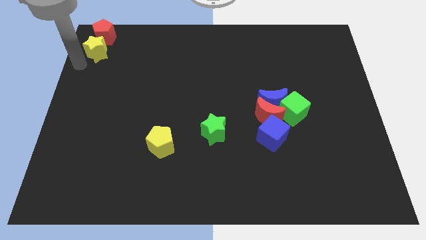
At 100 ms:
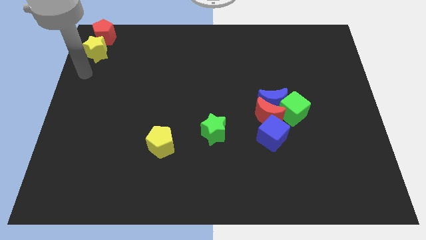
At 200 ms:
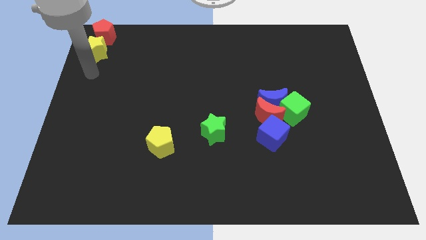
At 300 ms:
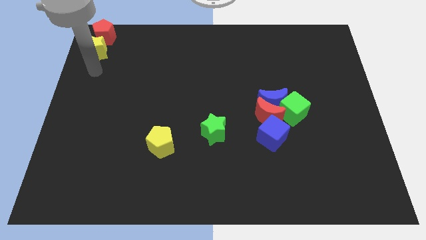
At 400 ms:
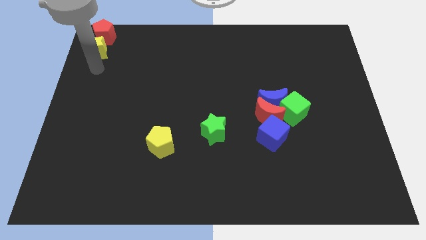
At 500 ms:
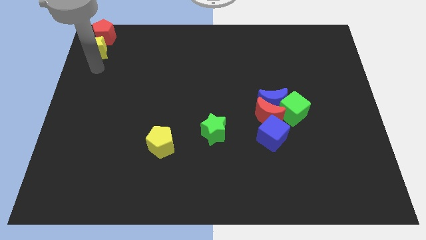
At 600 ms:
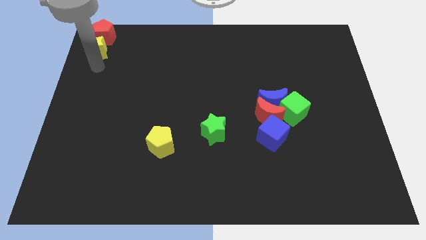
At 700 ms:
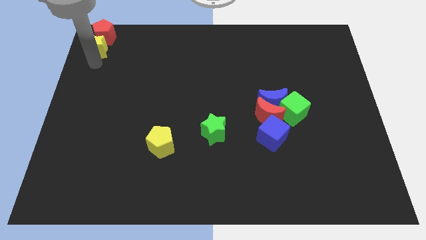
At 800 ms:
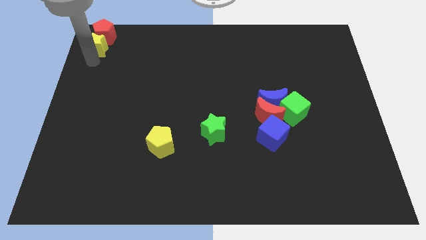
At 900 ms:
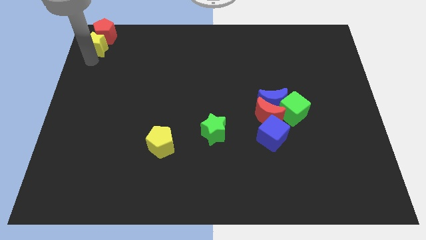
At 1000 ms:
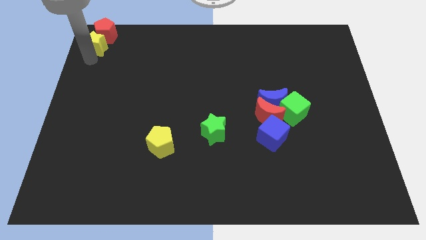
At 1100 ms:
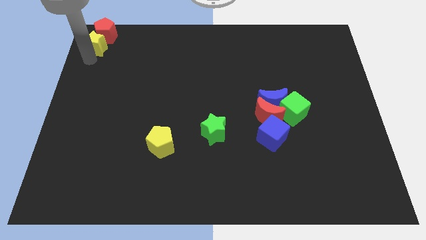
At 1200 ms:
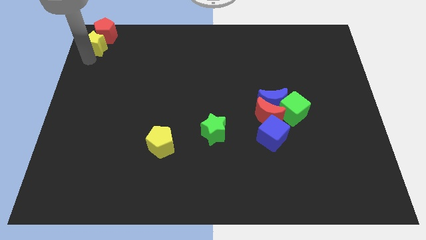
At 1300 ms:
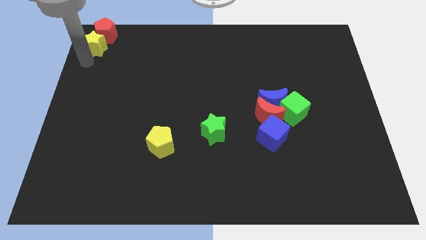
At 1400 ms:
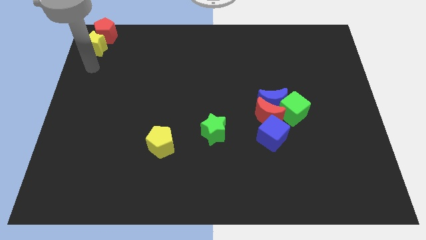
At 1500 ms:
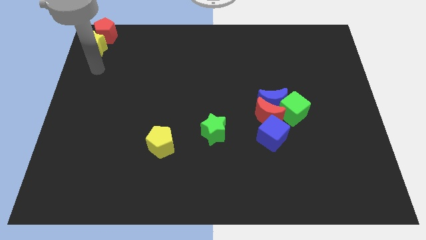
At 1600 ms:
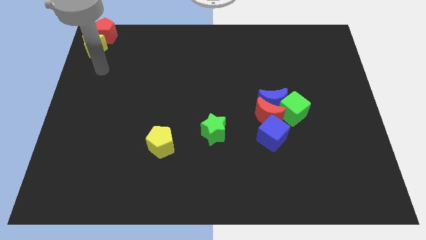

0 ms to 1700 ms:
push the yellow star into the red pentagon

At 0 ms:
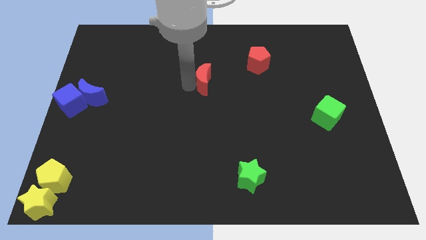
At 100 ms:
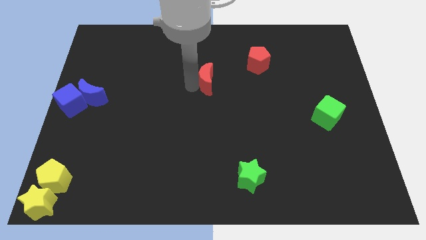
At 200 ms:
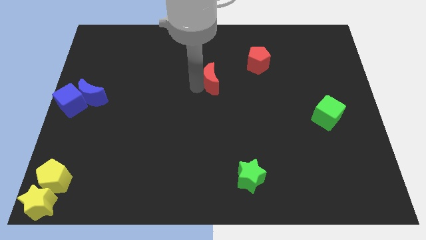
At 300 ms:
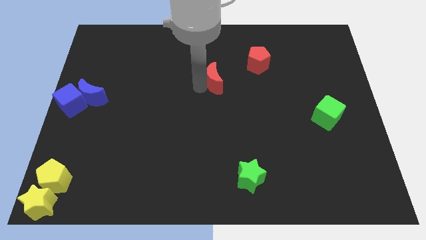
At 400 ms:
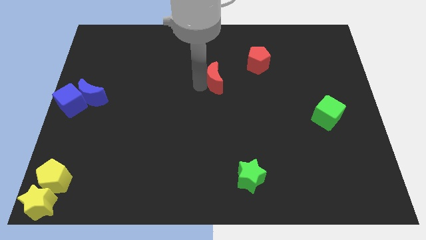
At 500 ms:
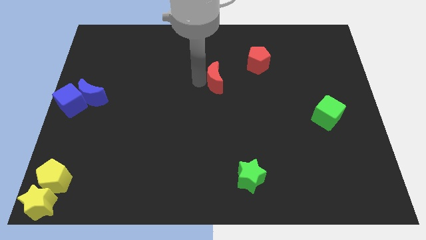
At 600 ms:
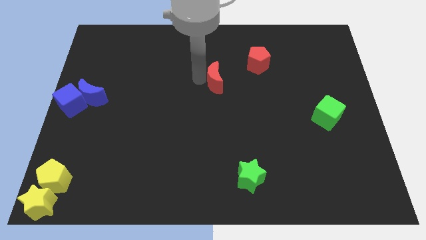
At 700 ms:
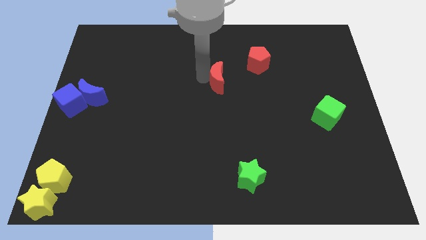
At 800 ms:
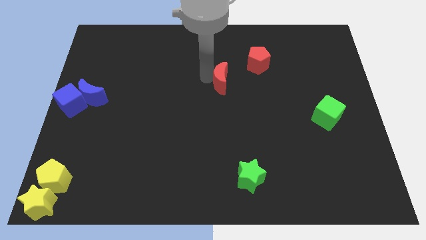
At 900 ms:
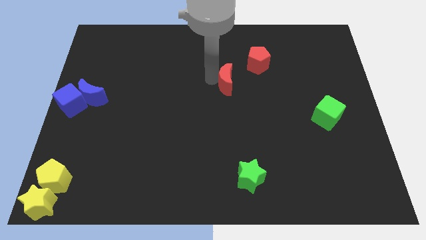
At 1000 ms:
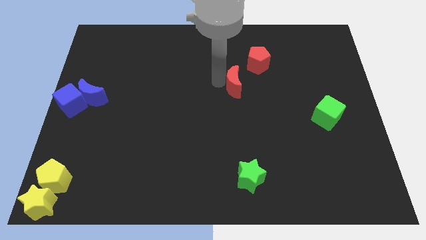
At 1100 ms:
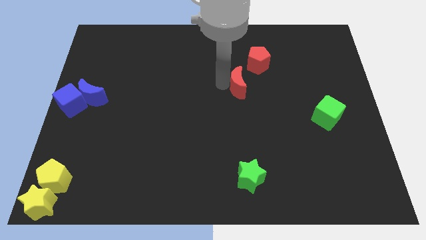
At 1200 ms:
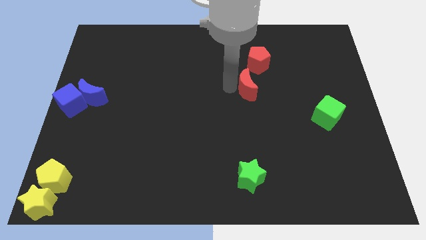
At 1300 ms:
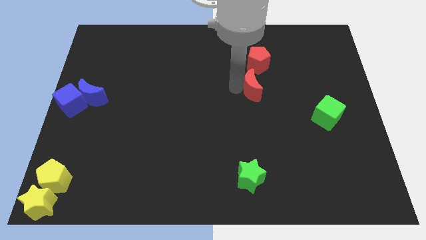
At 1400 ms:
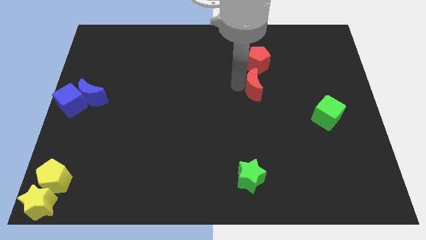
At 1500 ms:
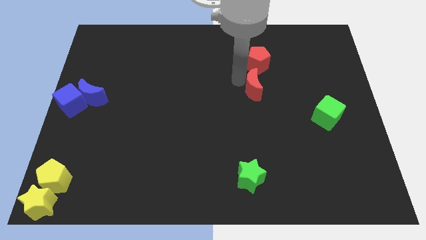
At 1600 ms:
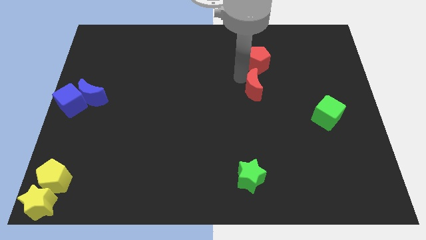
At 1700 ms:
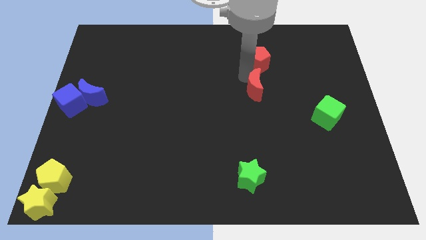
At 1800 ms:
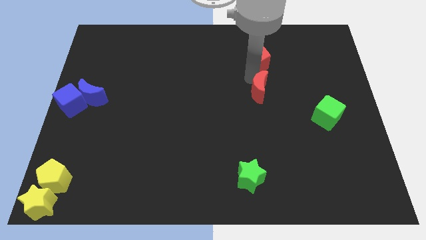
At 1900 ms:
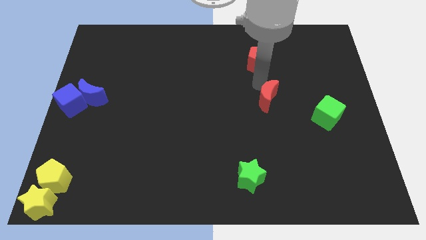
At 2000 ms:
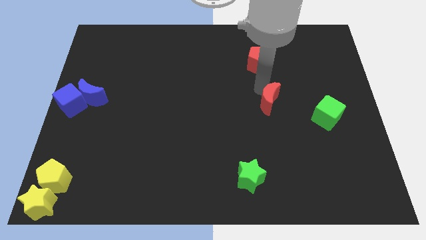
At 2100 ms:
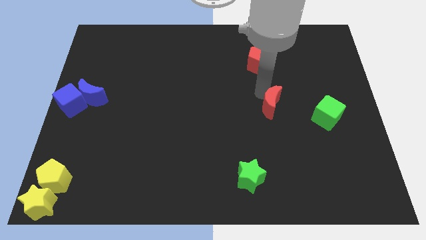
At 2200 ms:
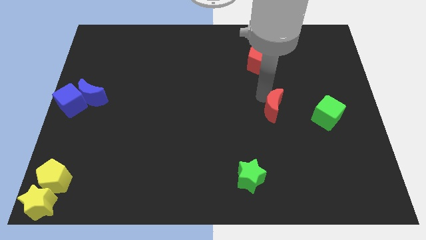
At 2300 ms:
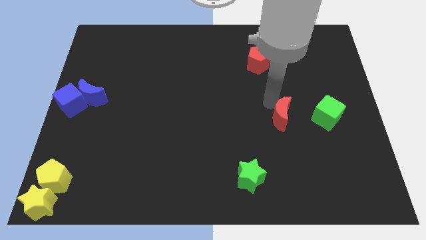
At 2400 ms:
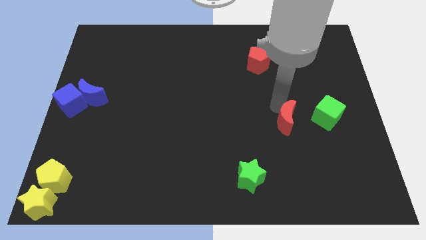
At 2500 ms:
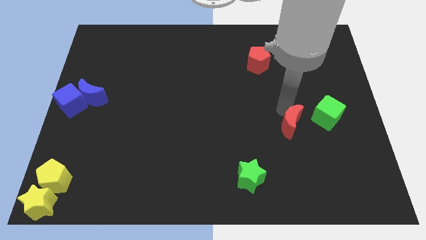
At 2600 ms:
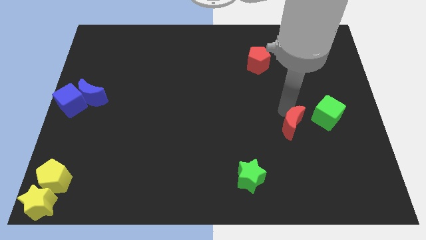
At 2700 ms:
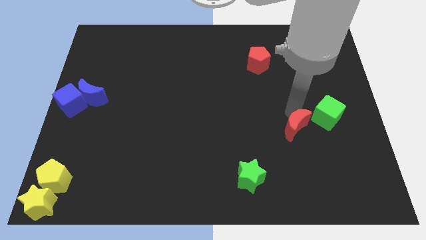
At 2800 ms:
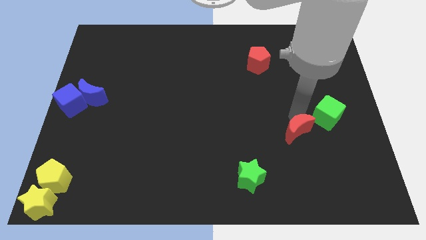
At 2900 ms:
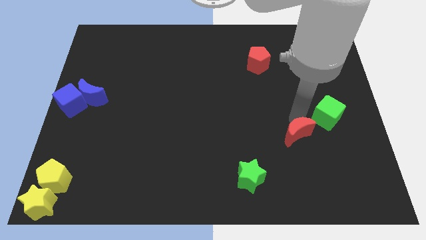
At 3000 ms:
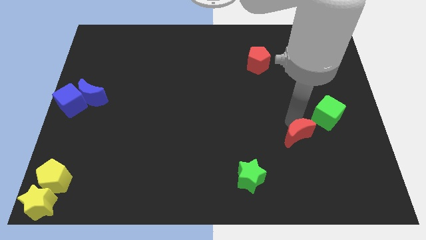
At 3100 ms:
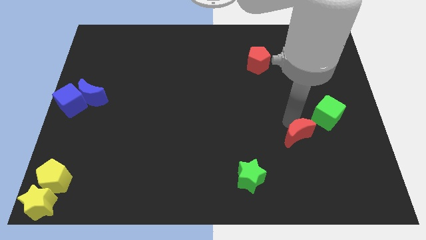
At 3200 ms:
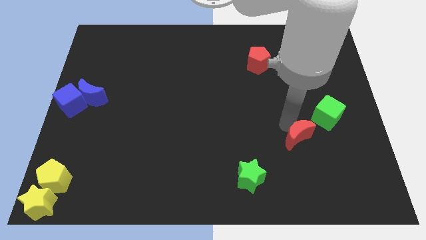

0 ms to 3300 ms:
push the red crescent close to the green cube

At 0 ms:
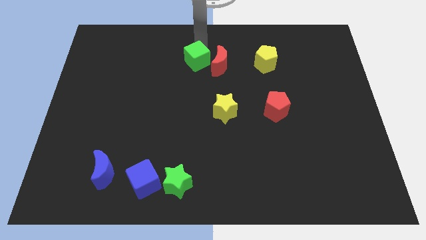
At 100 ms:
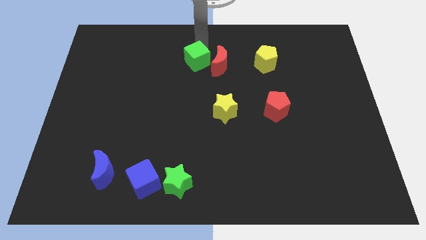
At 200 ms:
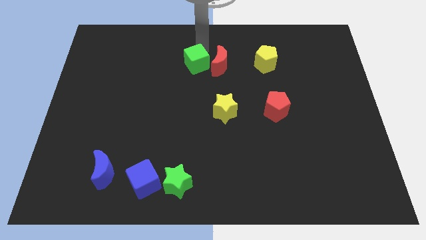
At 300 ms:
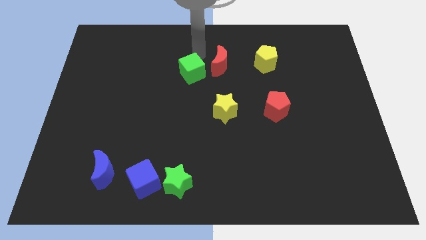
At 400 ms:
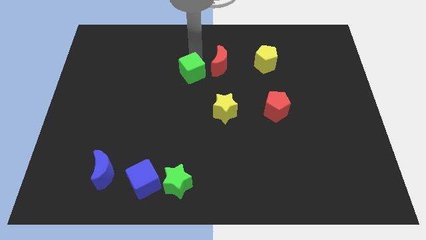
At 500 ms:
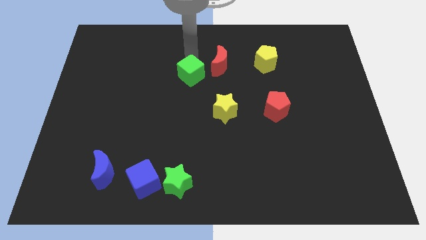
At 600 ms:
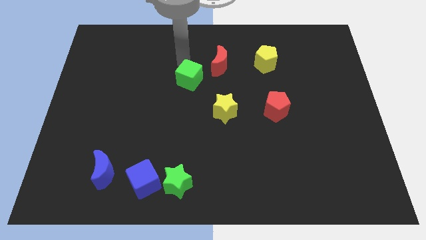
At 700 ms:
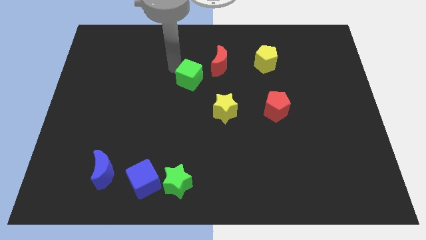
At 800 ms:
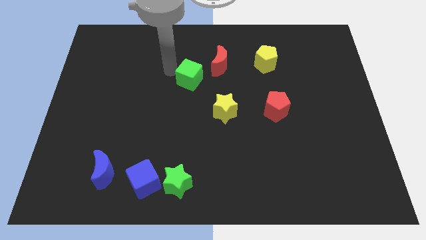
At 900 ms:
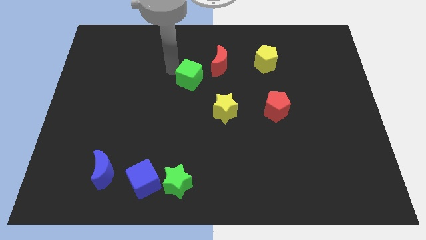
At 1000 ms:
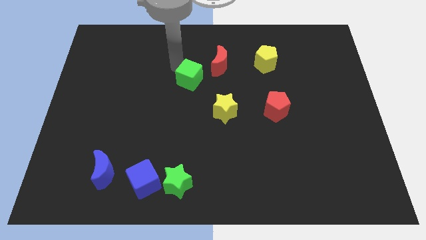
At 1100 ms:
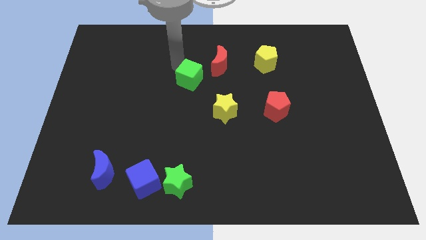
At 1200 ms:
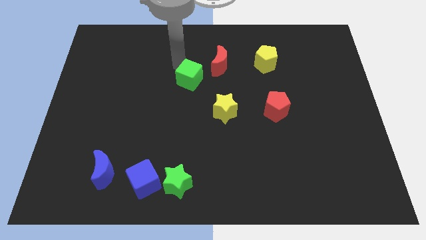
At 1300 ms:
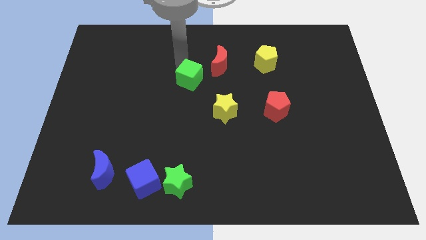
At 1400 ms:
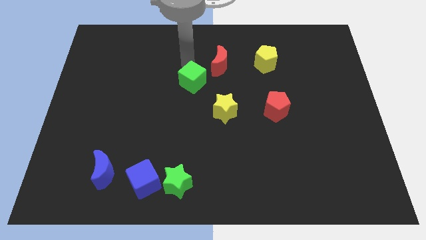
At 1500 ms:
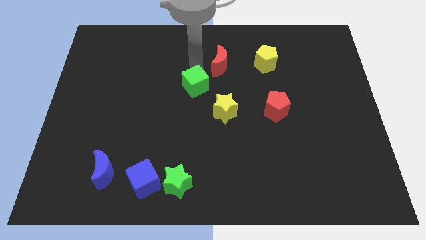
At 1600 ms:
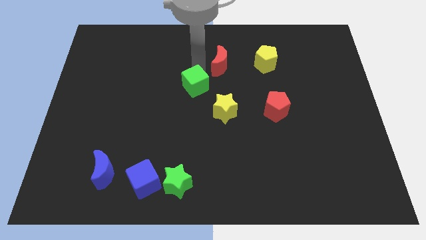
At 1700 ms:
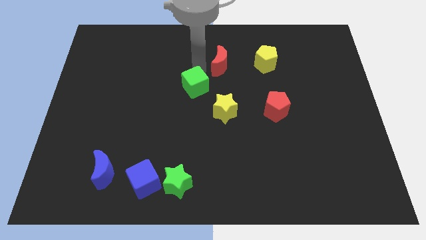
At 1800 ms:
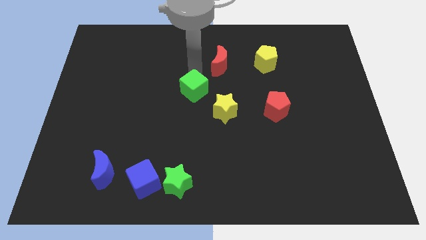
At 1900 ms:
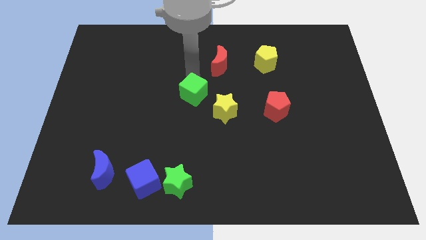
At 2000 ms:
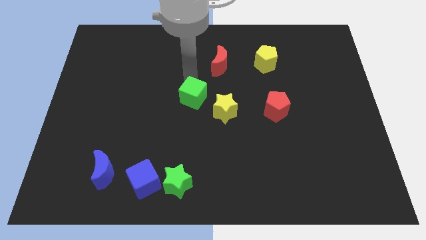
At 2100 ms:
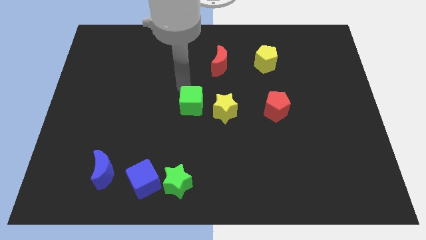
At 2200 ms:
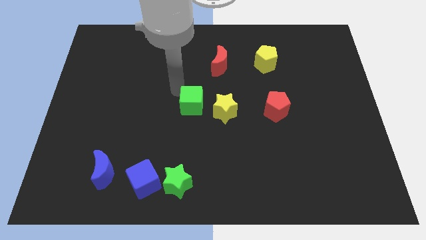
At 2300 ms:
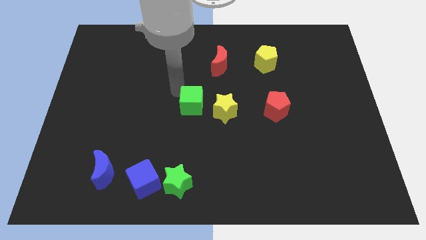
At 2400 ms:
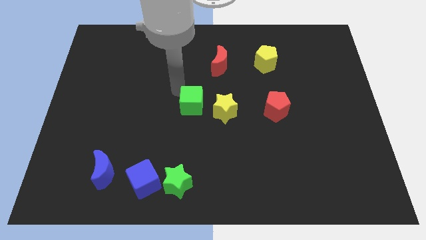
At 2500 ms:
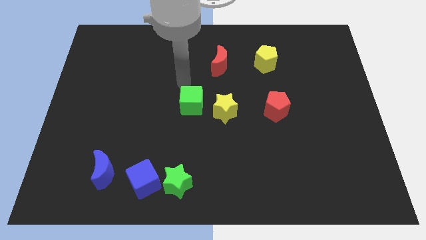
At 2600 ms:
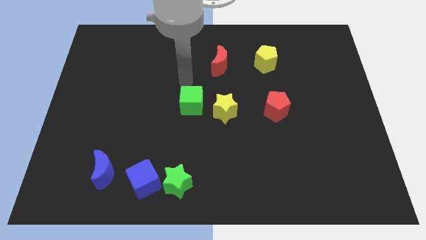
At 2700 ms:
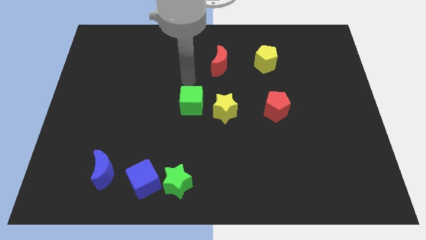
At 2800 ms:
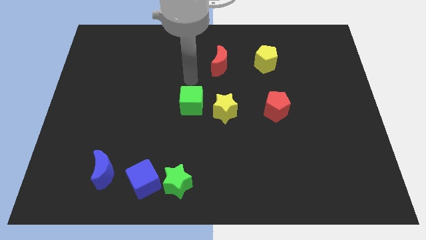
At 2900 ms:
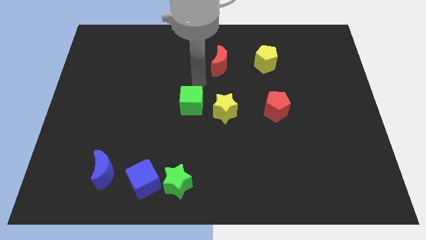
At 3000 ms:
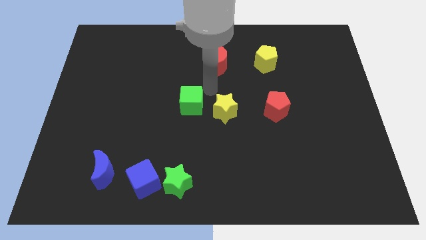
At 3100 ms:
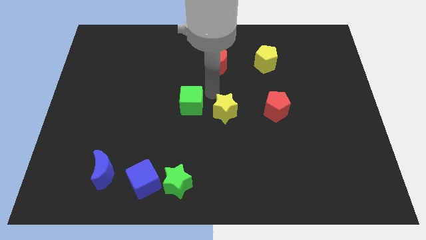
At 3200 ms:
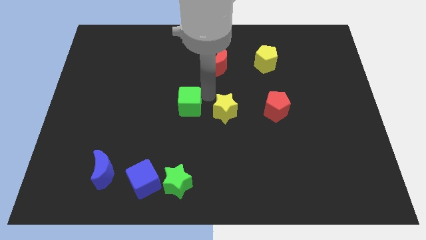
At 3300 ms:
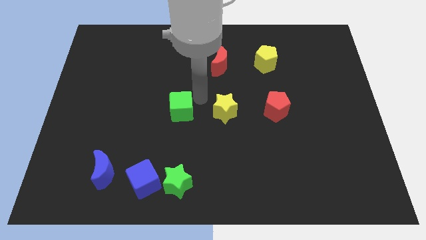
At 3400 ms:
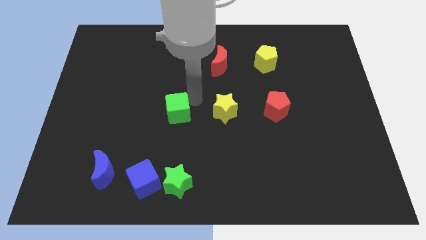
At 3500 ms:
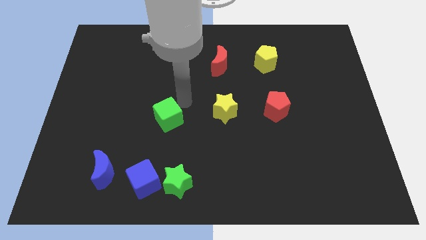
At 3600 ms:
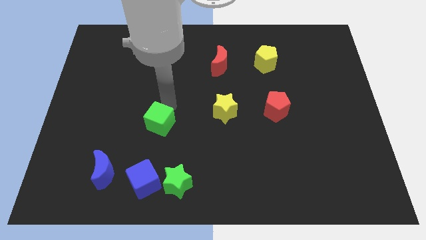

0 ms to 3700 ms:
push the green block to down wards

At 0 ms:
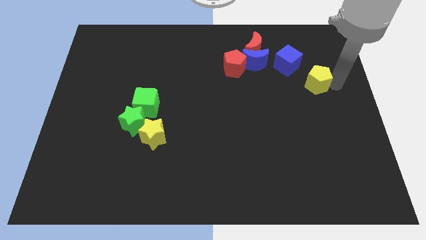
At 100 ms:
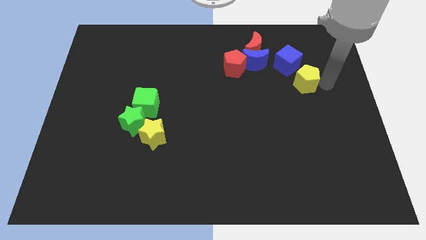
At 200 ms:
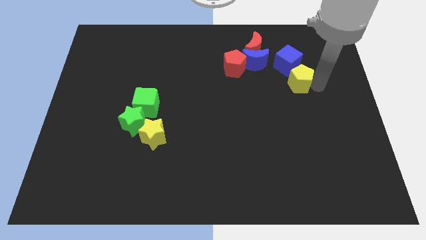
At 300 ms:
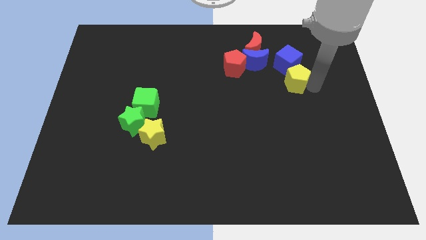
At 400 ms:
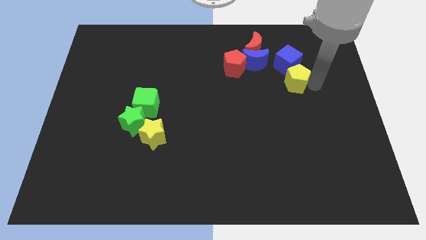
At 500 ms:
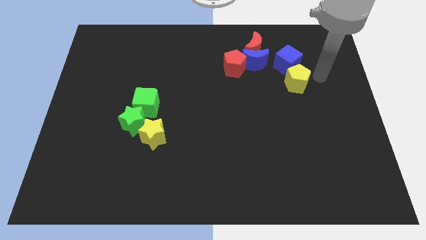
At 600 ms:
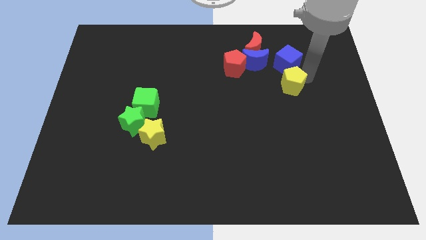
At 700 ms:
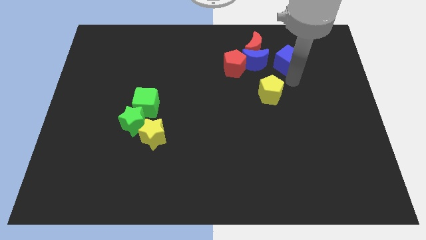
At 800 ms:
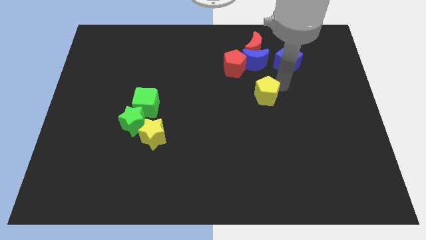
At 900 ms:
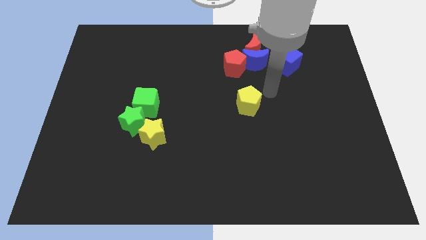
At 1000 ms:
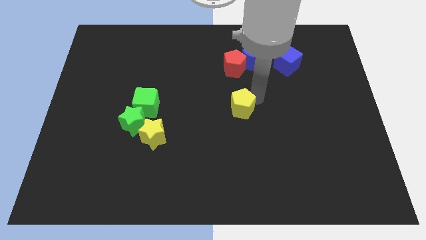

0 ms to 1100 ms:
push the yellow pentagon to the bottom side of the red pentagon
